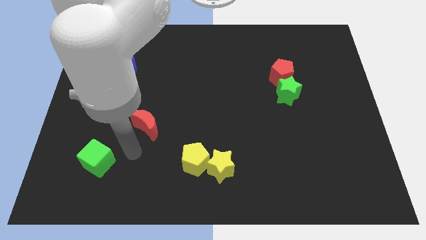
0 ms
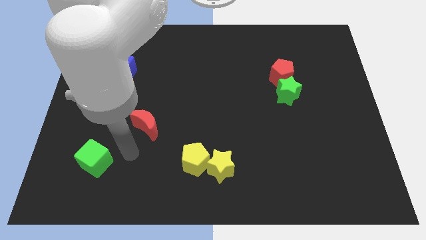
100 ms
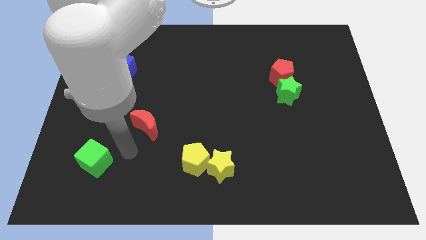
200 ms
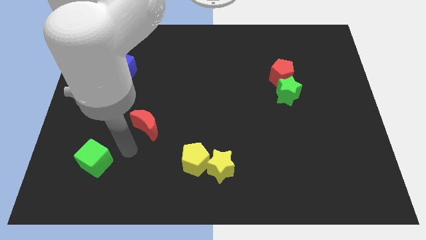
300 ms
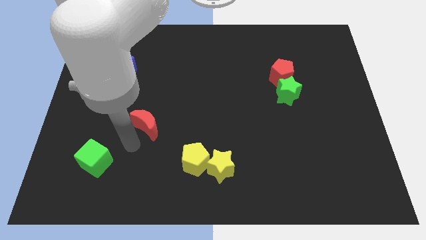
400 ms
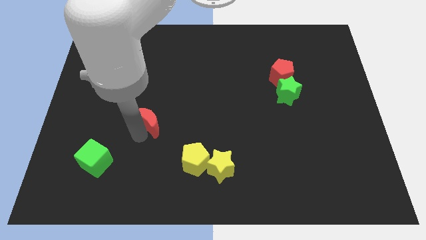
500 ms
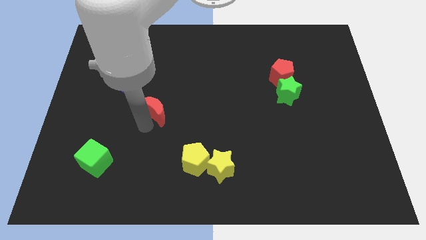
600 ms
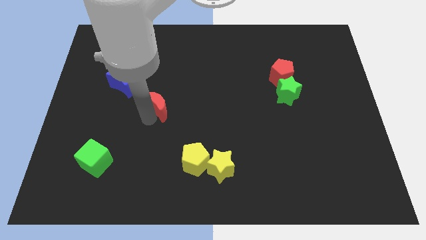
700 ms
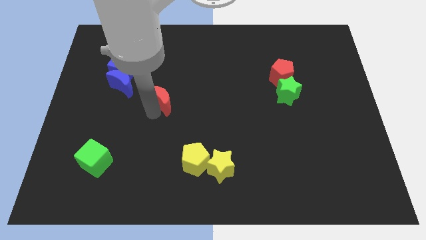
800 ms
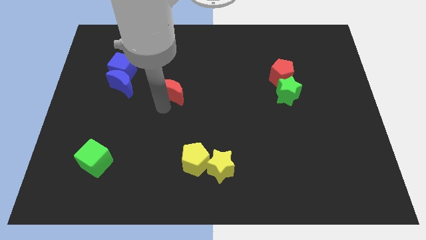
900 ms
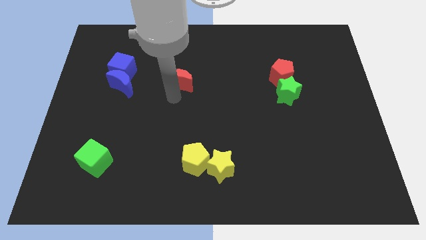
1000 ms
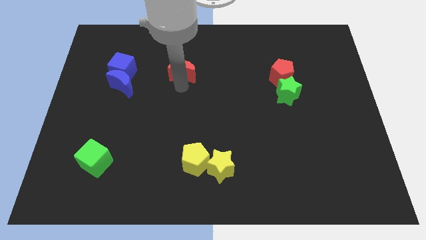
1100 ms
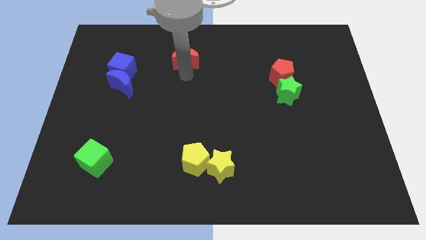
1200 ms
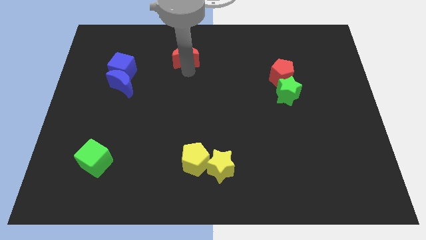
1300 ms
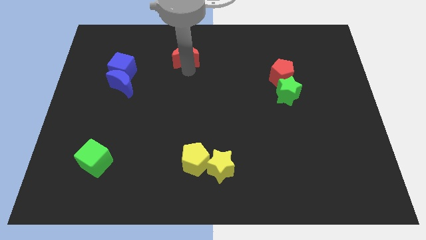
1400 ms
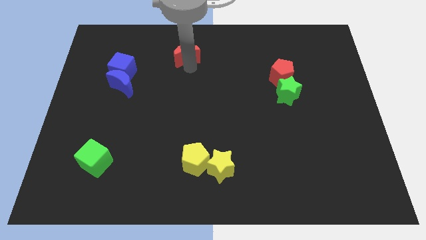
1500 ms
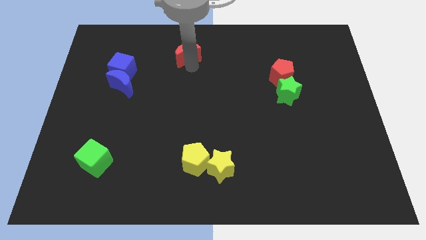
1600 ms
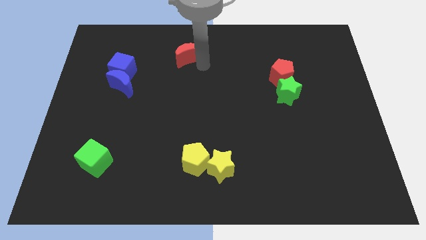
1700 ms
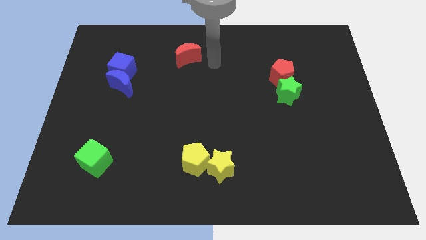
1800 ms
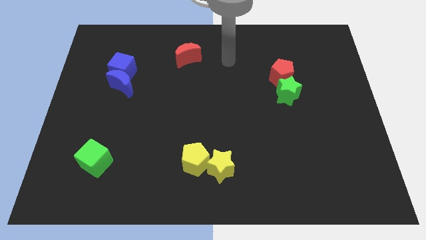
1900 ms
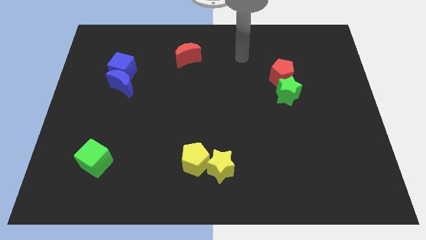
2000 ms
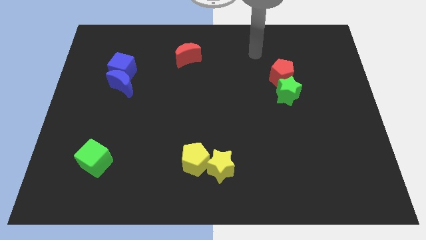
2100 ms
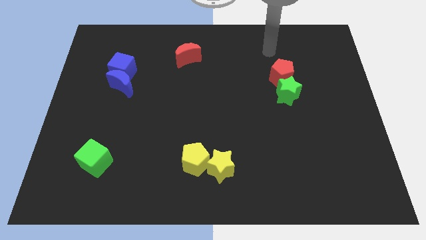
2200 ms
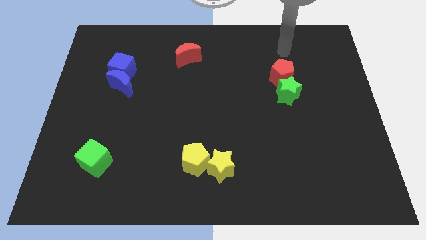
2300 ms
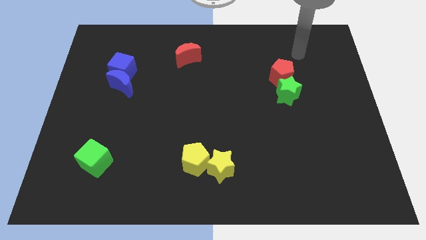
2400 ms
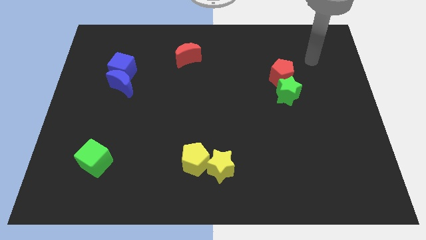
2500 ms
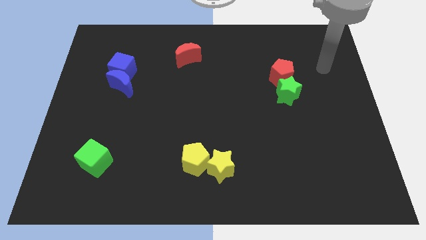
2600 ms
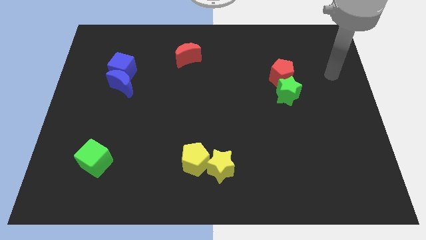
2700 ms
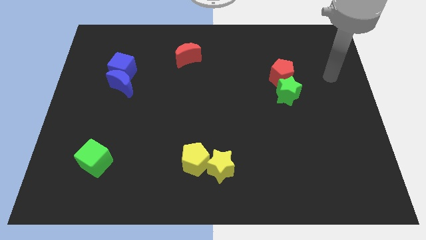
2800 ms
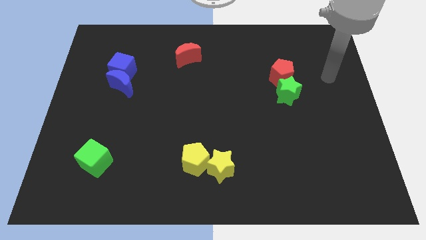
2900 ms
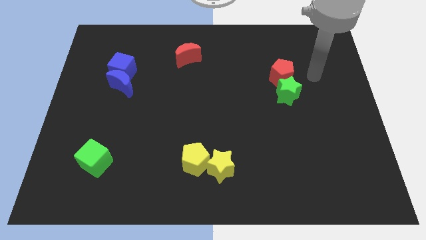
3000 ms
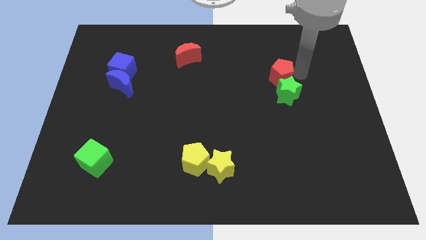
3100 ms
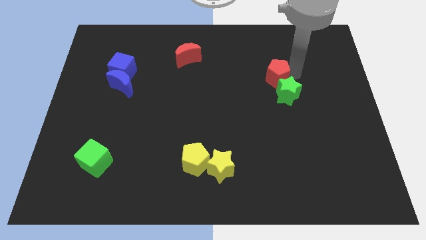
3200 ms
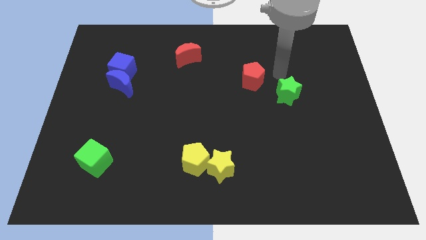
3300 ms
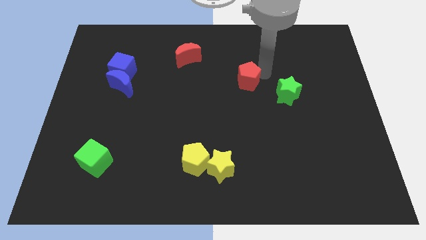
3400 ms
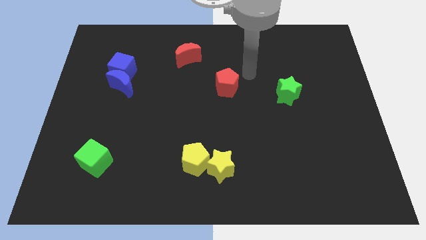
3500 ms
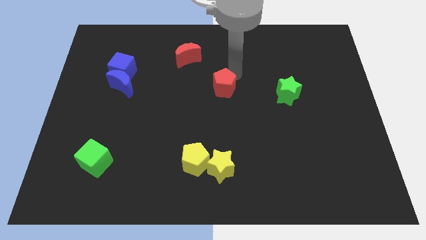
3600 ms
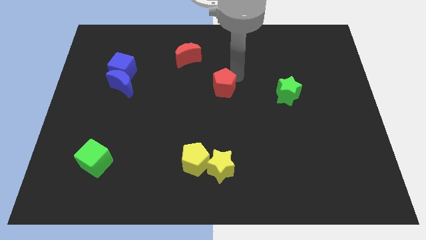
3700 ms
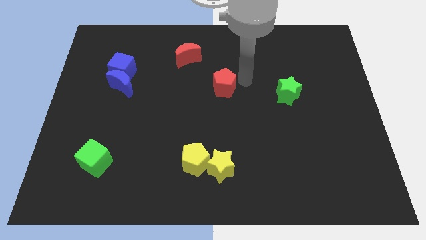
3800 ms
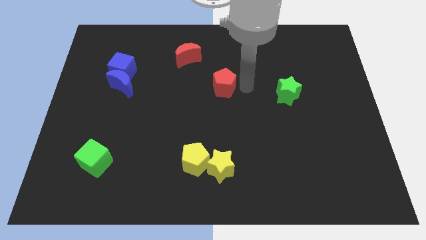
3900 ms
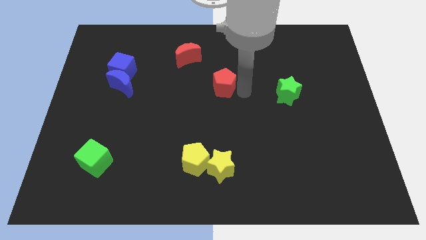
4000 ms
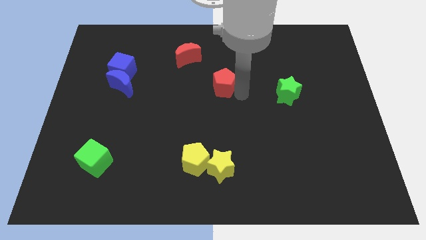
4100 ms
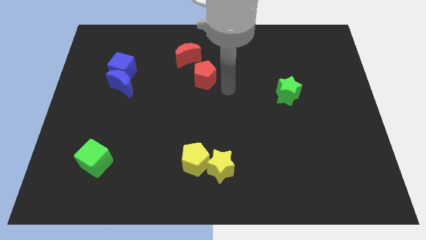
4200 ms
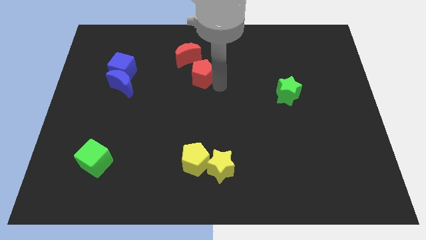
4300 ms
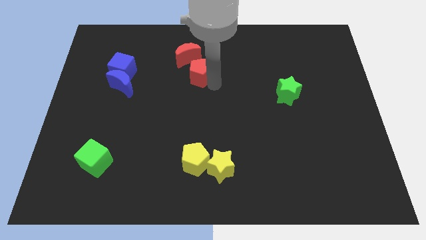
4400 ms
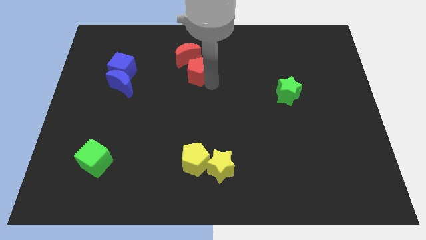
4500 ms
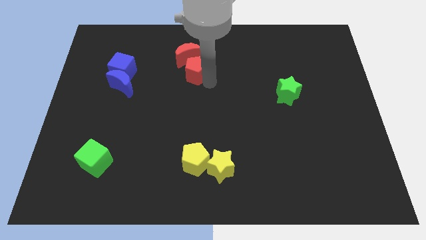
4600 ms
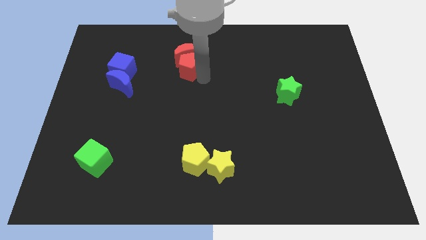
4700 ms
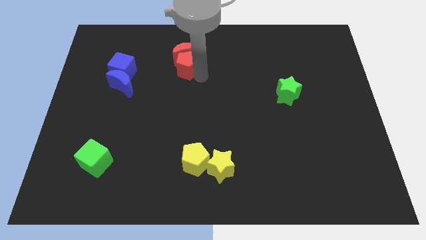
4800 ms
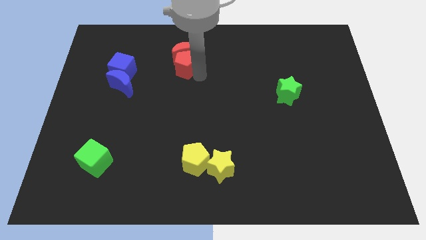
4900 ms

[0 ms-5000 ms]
move the red pentagon below the red crescent

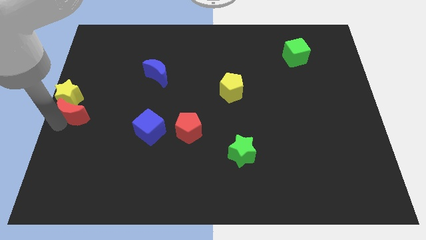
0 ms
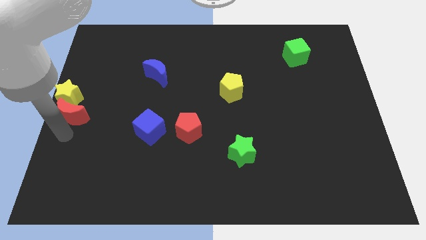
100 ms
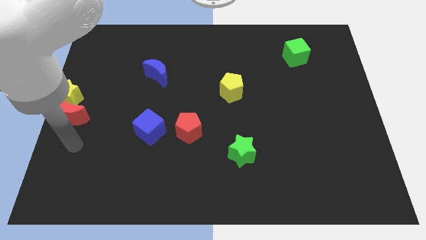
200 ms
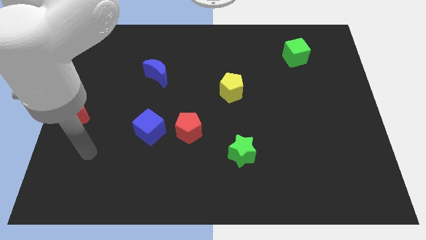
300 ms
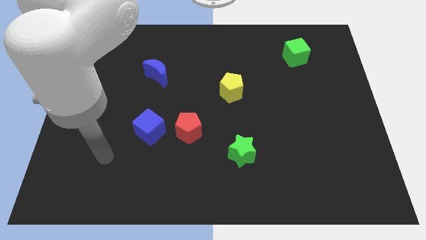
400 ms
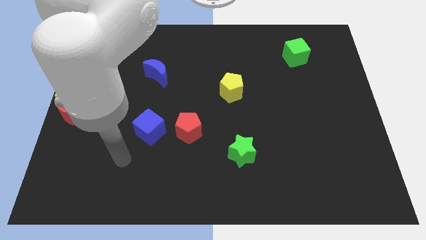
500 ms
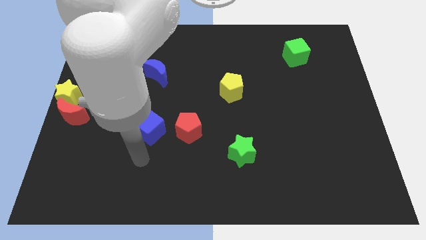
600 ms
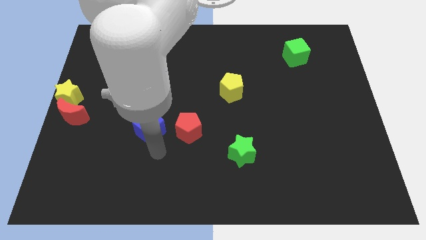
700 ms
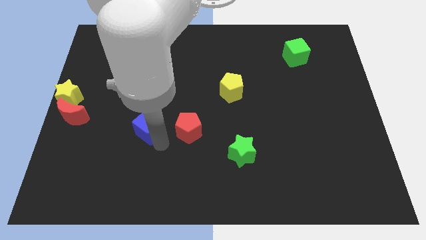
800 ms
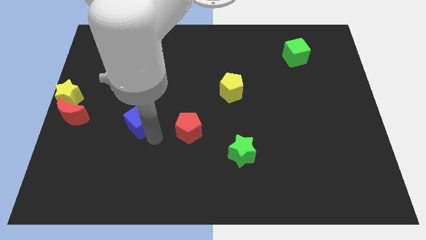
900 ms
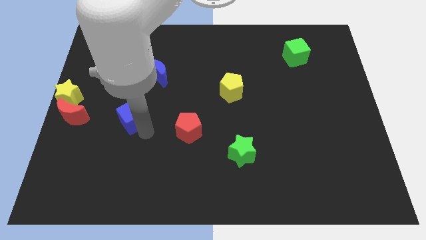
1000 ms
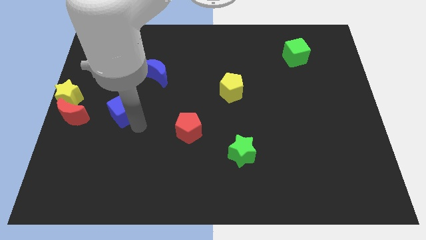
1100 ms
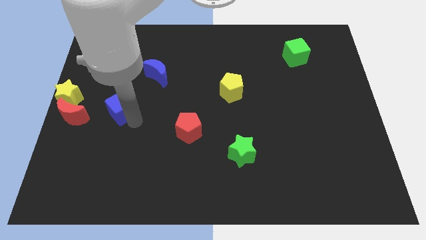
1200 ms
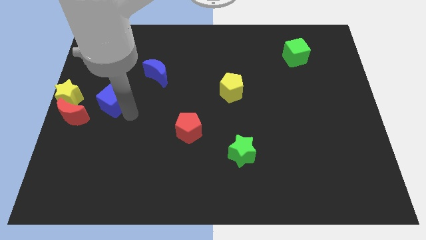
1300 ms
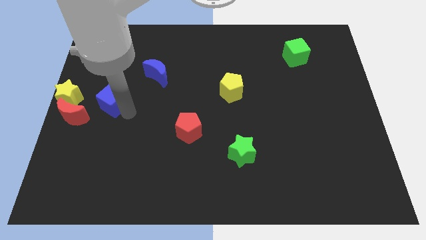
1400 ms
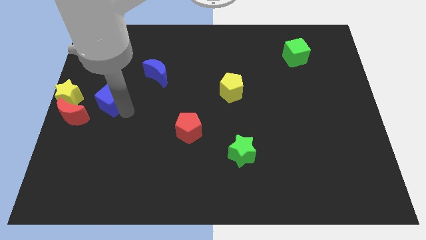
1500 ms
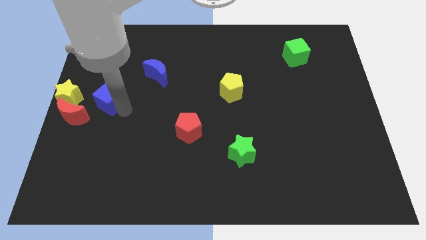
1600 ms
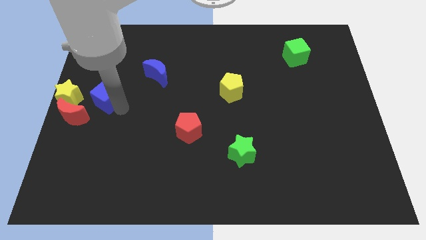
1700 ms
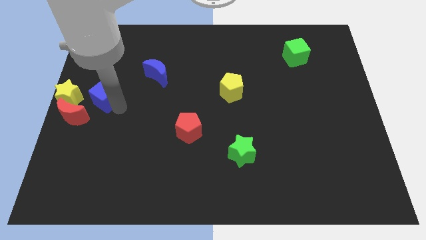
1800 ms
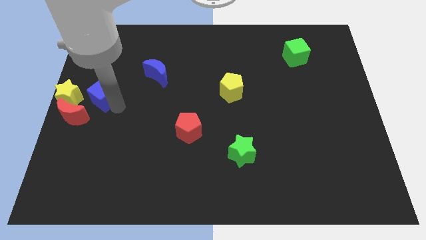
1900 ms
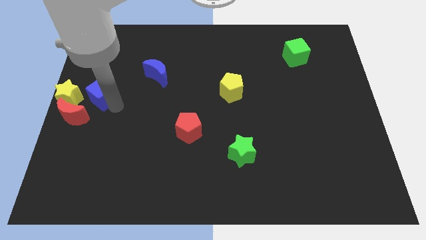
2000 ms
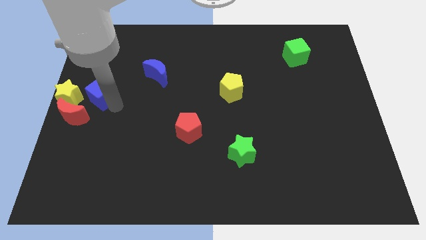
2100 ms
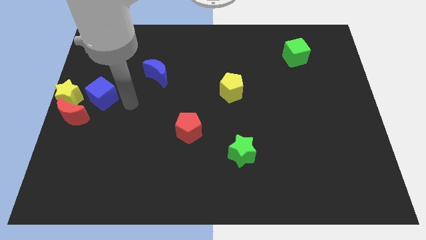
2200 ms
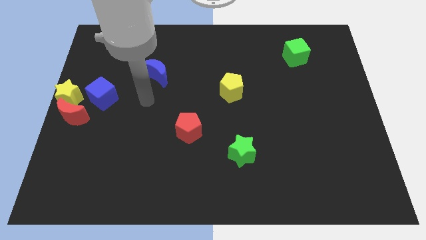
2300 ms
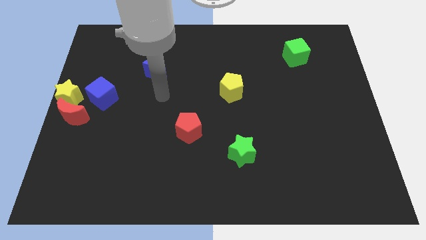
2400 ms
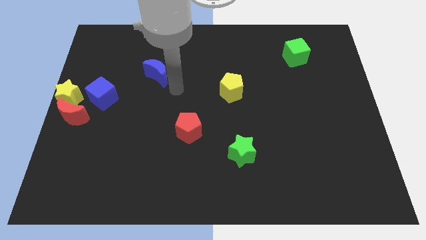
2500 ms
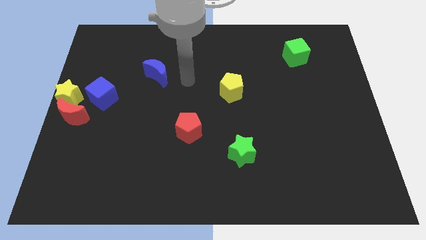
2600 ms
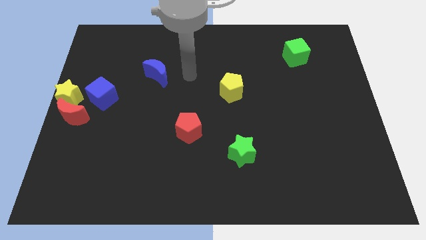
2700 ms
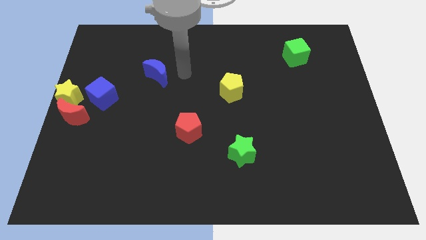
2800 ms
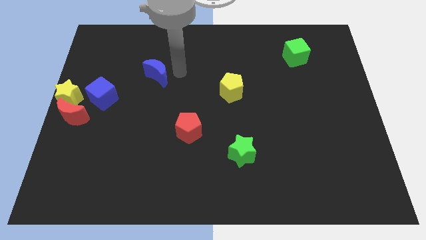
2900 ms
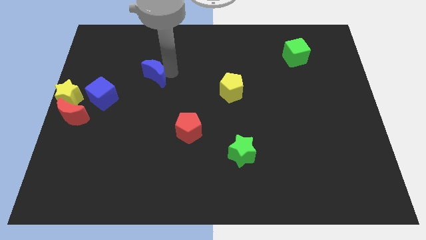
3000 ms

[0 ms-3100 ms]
place the blue cube diagonally in between the red moon and blue moon

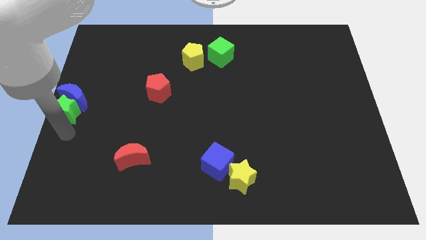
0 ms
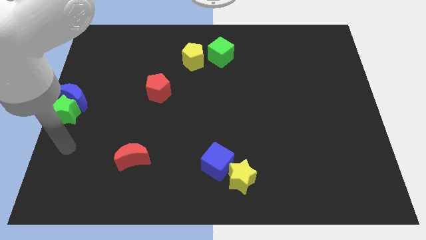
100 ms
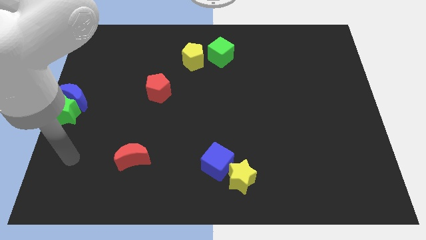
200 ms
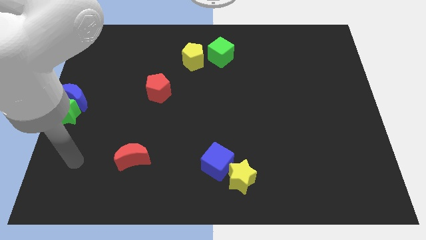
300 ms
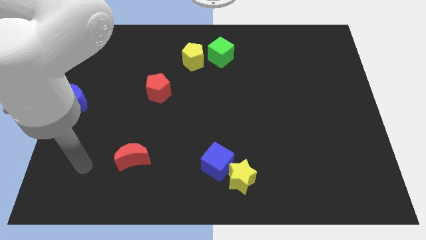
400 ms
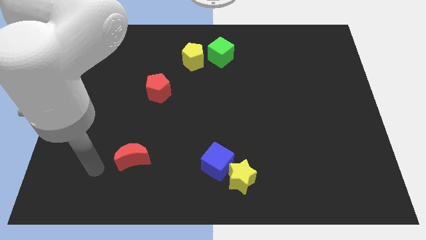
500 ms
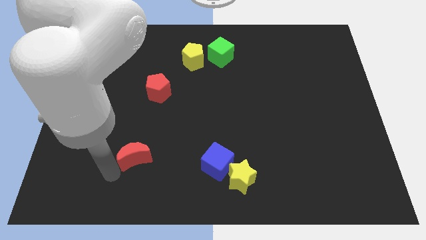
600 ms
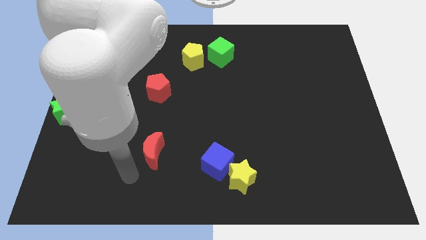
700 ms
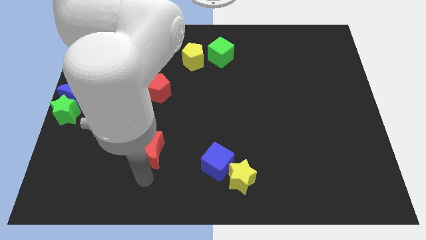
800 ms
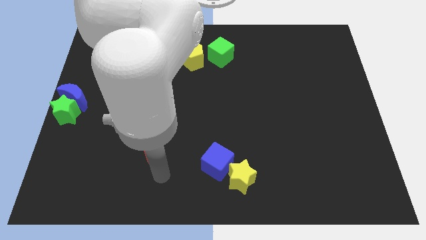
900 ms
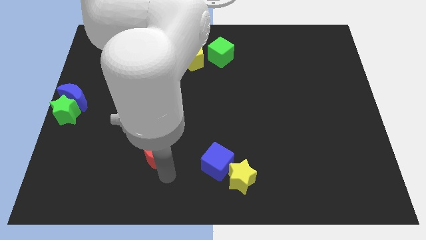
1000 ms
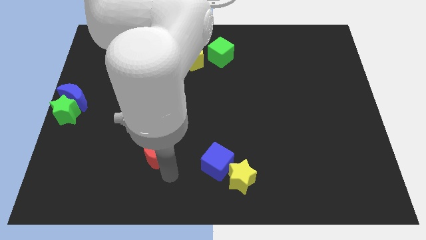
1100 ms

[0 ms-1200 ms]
move your arm away from green star
